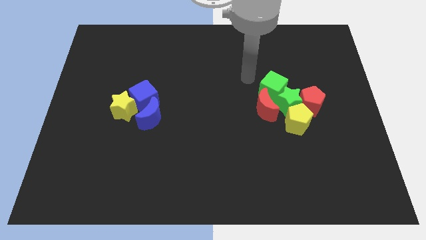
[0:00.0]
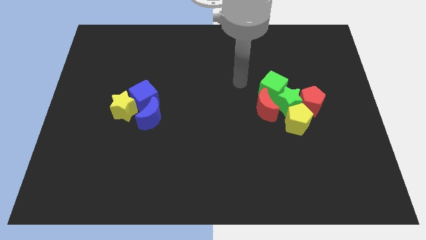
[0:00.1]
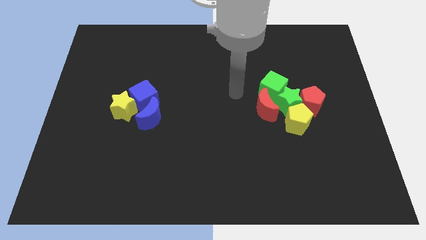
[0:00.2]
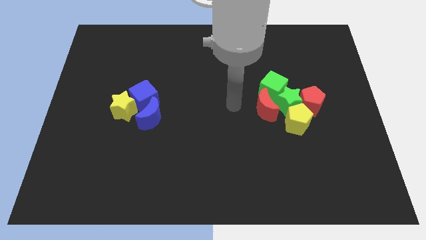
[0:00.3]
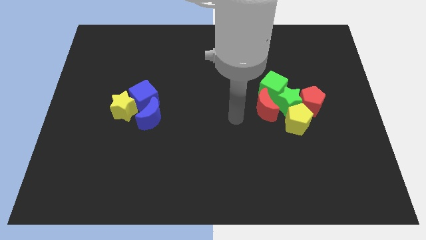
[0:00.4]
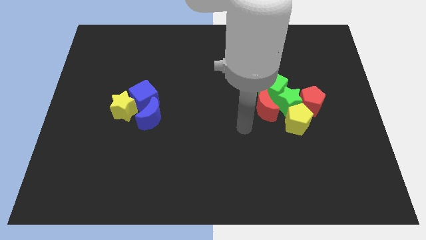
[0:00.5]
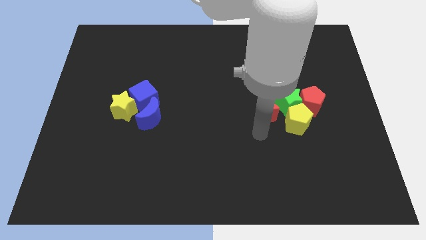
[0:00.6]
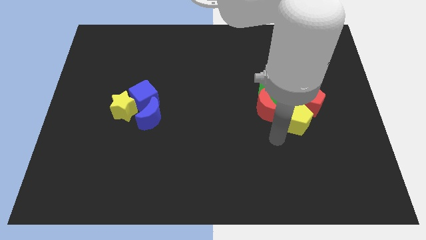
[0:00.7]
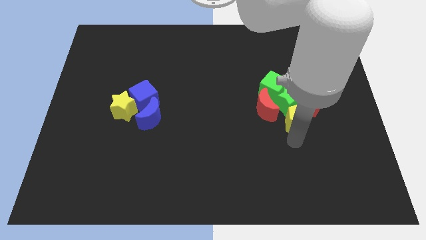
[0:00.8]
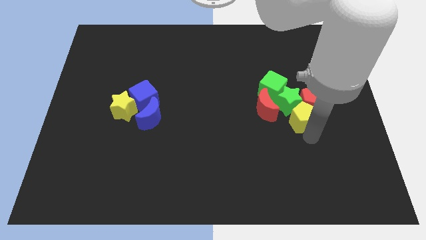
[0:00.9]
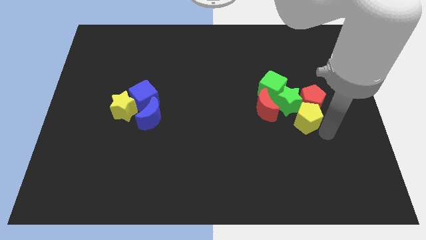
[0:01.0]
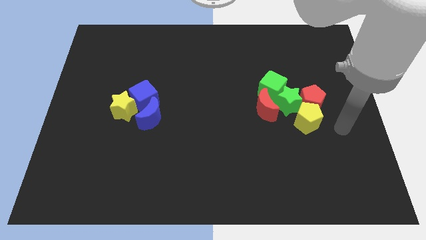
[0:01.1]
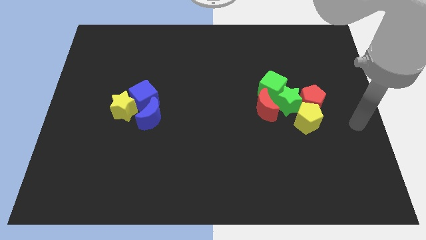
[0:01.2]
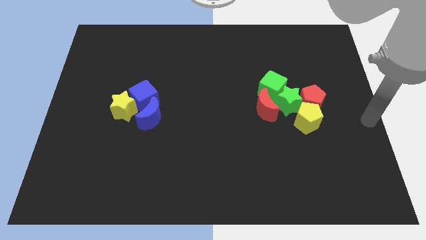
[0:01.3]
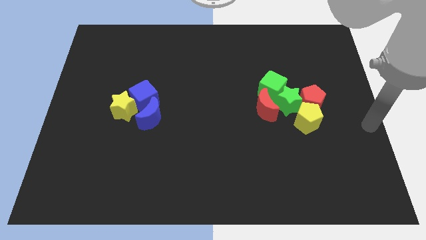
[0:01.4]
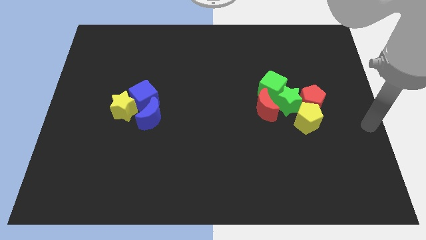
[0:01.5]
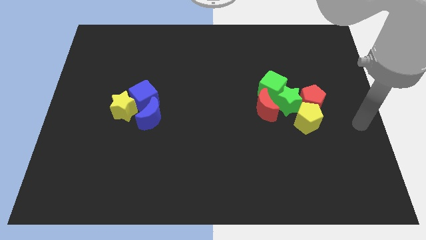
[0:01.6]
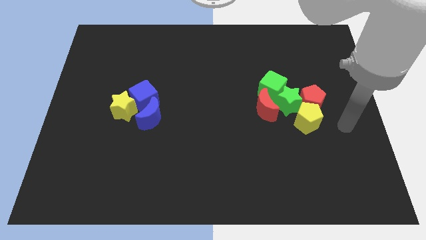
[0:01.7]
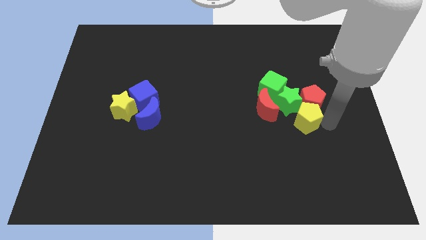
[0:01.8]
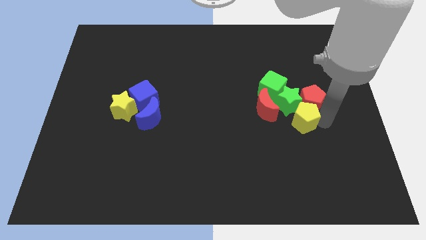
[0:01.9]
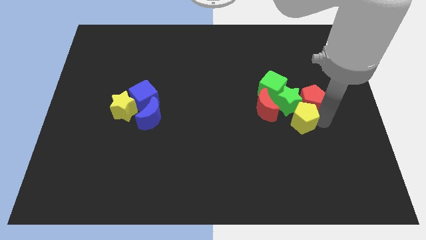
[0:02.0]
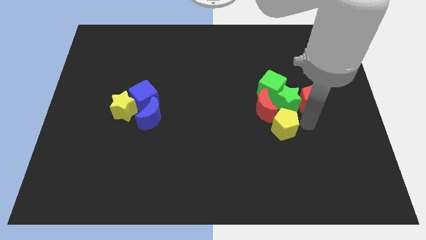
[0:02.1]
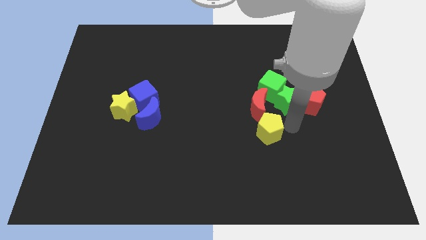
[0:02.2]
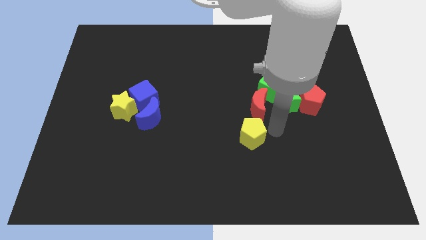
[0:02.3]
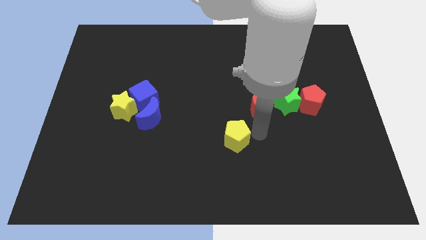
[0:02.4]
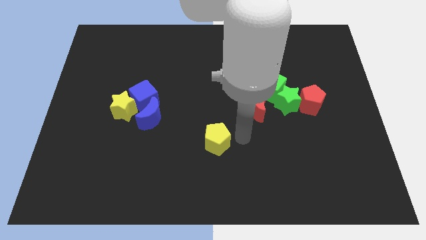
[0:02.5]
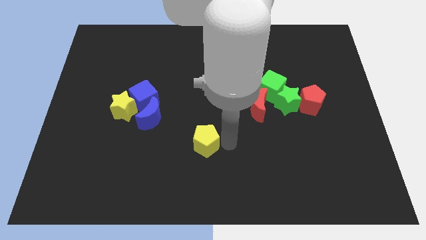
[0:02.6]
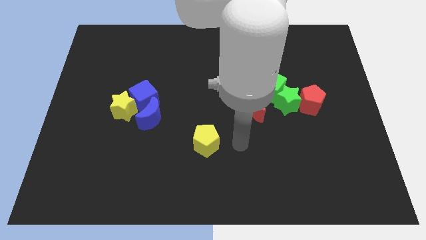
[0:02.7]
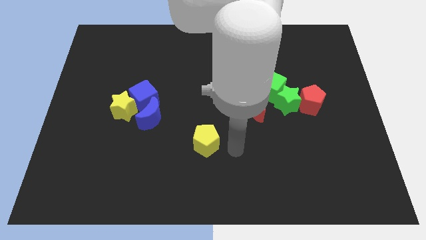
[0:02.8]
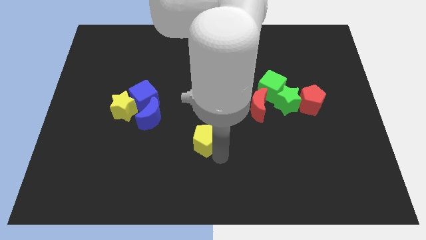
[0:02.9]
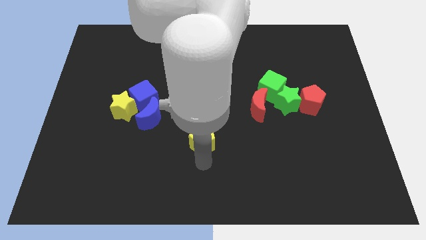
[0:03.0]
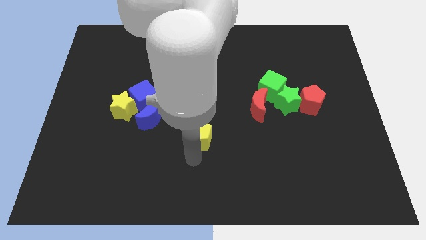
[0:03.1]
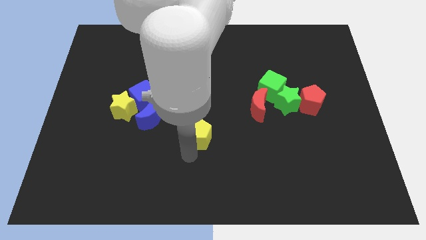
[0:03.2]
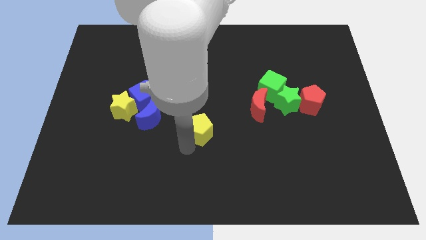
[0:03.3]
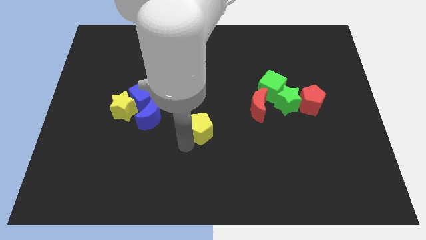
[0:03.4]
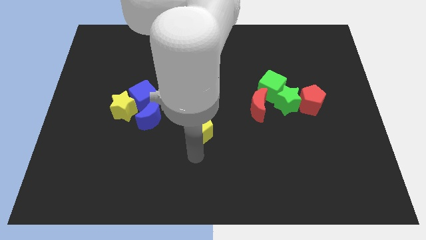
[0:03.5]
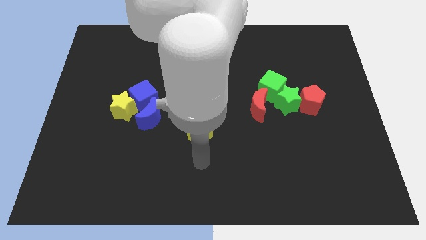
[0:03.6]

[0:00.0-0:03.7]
push the yellow pentagon to the center of the board

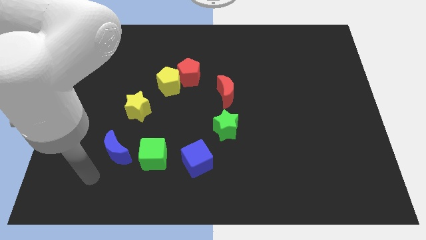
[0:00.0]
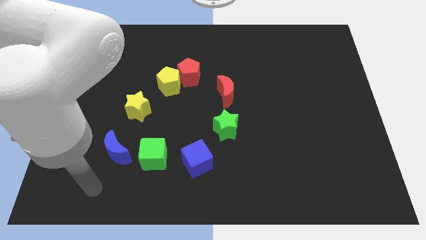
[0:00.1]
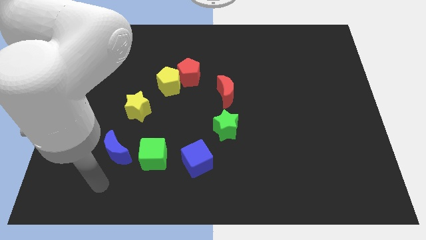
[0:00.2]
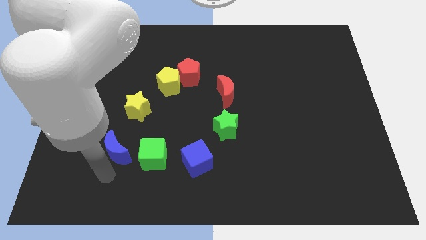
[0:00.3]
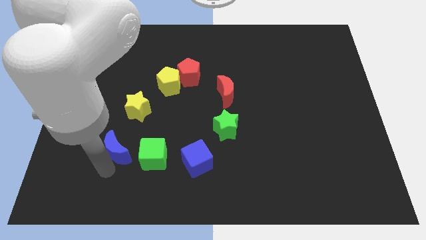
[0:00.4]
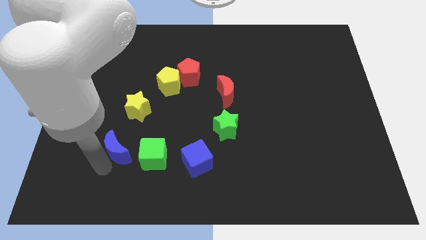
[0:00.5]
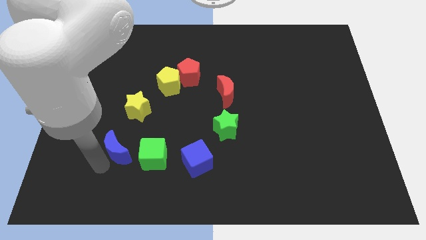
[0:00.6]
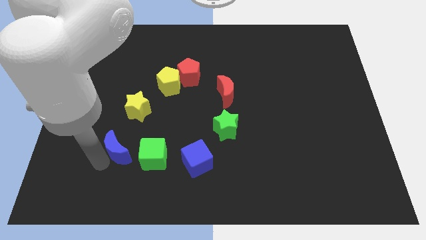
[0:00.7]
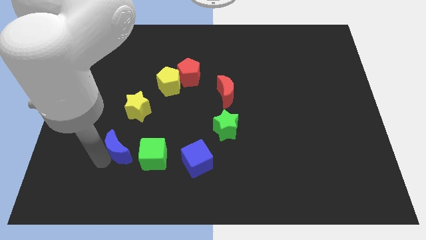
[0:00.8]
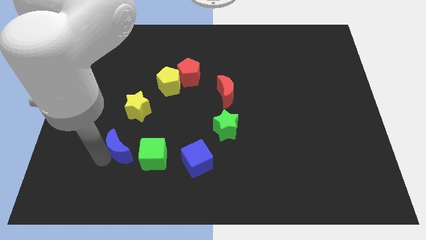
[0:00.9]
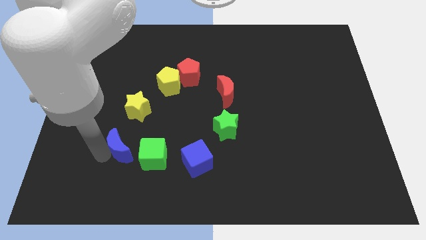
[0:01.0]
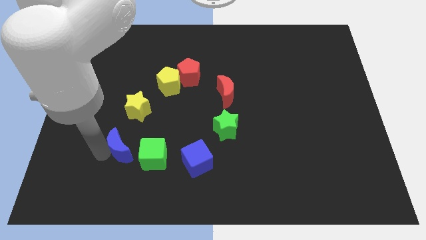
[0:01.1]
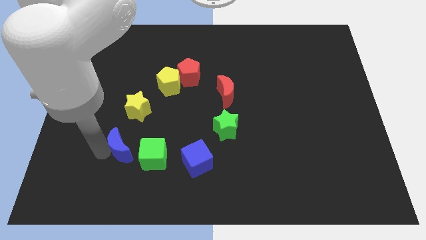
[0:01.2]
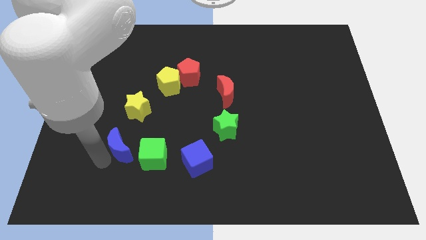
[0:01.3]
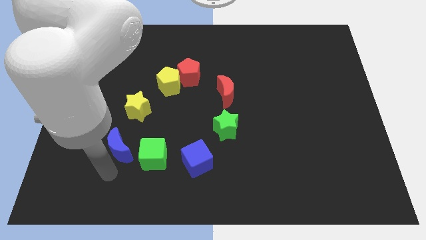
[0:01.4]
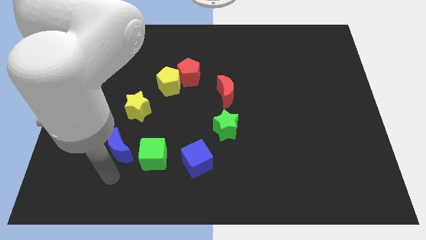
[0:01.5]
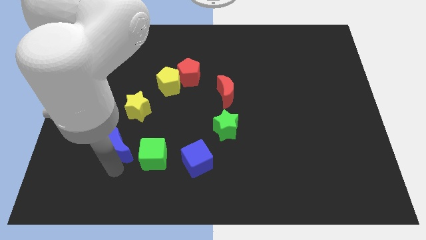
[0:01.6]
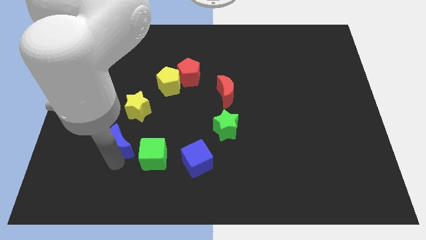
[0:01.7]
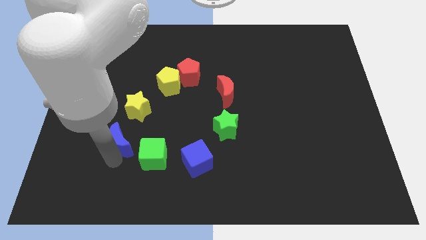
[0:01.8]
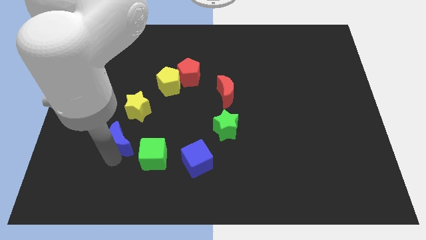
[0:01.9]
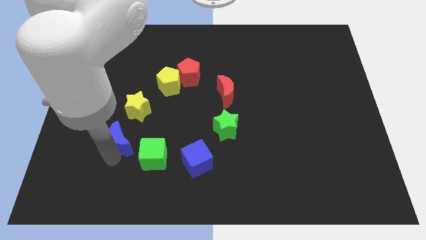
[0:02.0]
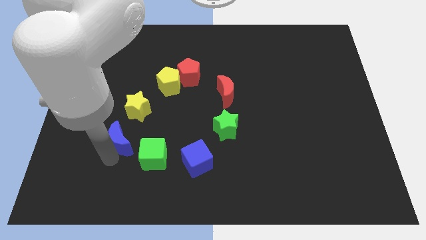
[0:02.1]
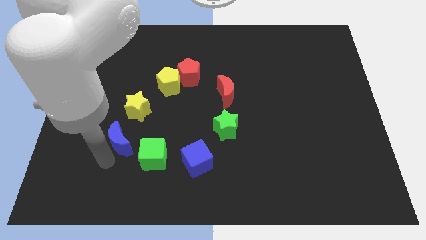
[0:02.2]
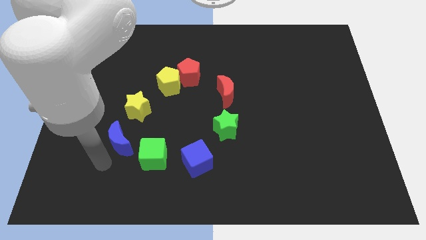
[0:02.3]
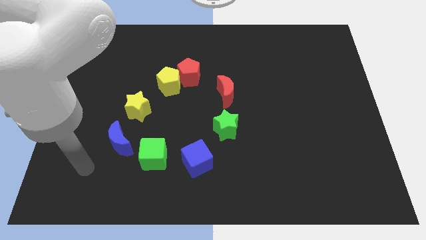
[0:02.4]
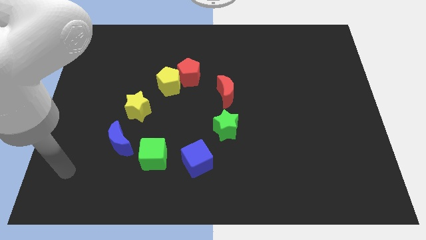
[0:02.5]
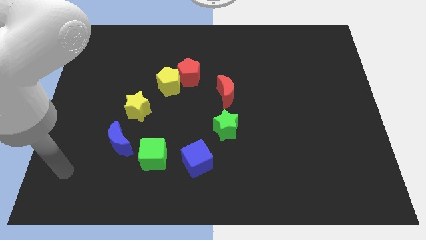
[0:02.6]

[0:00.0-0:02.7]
place your arm slightly towards the bottom left of the board

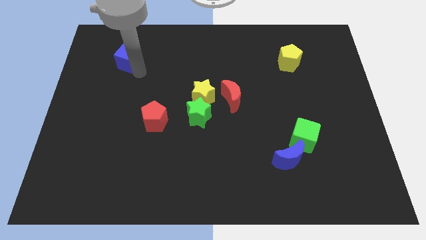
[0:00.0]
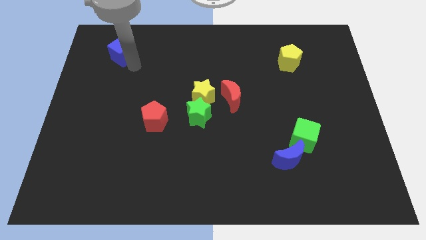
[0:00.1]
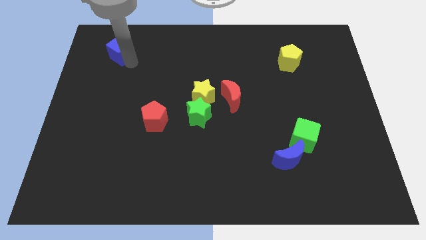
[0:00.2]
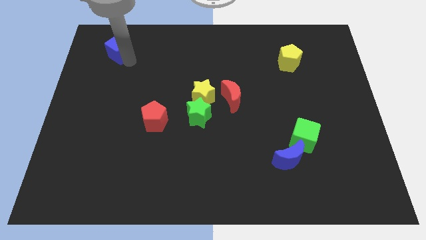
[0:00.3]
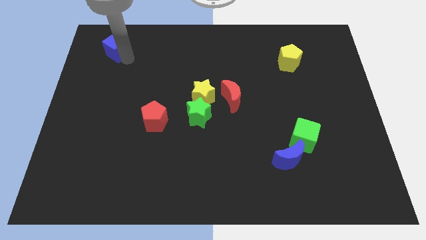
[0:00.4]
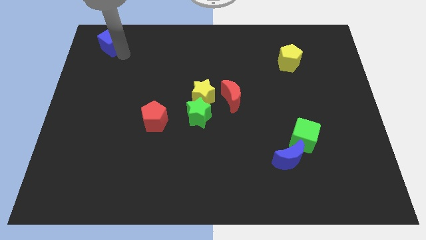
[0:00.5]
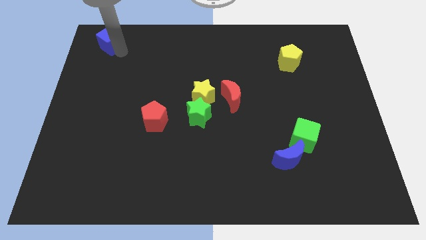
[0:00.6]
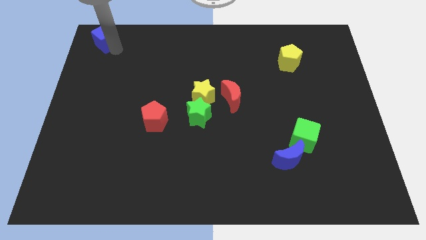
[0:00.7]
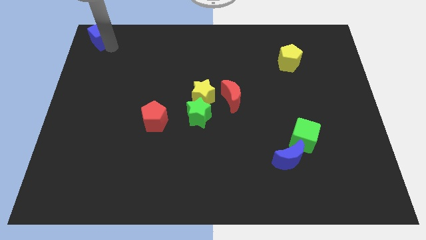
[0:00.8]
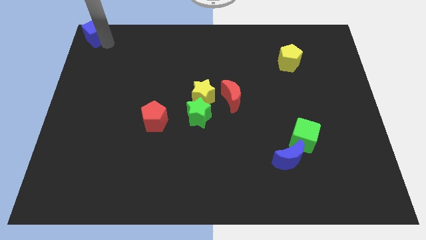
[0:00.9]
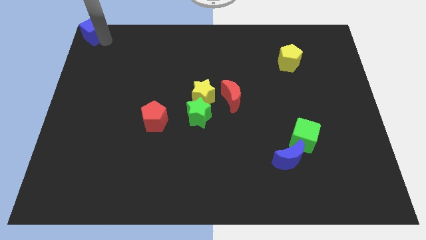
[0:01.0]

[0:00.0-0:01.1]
slide the blue cube to the top left corner of the board

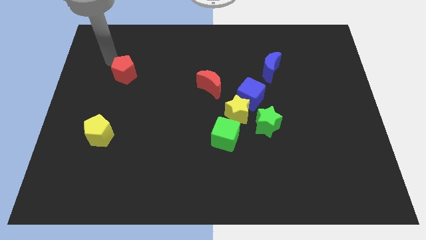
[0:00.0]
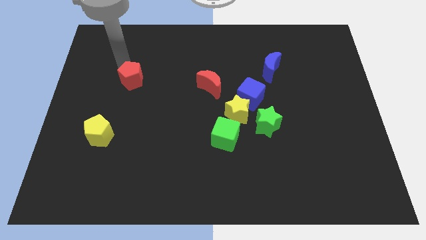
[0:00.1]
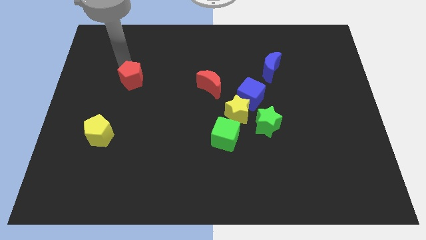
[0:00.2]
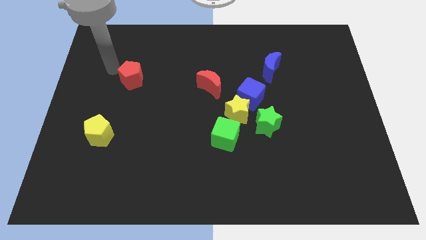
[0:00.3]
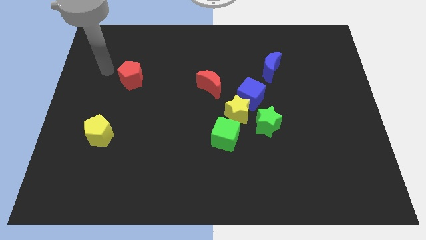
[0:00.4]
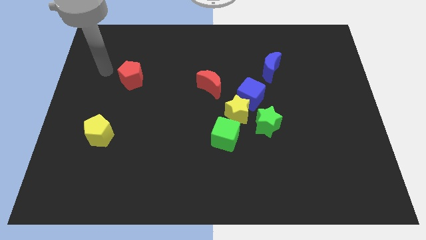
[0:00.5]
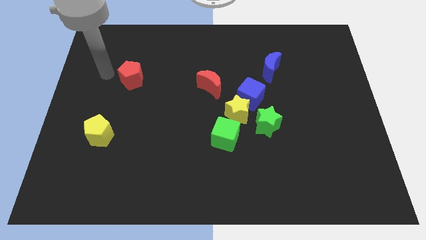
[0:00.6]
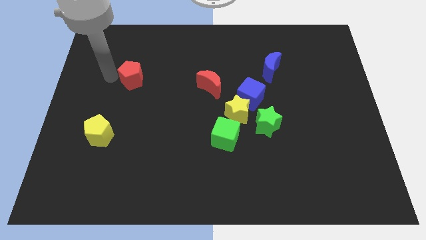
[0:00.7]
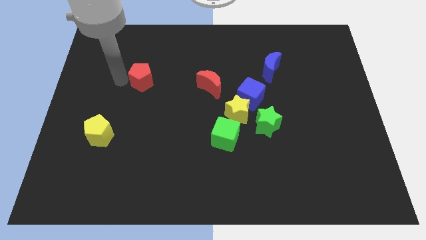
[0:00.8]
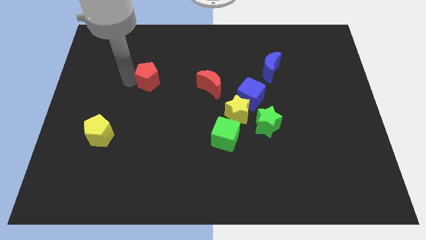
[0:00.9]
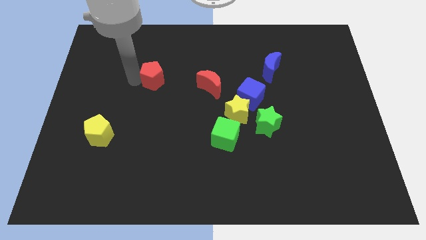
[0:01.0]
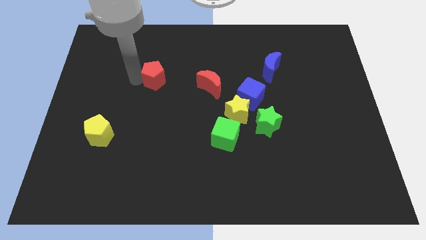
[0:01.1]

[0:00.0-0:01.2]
slide the red pentagon towards the red moon

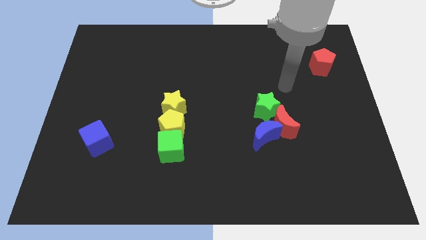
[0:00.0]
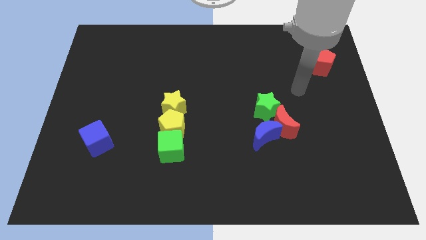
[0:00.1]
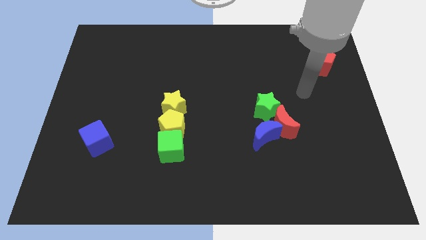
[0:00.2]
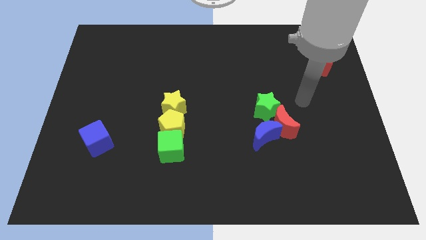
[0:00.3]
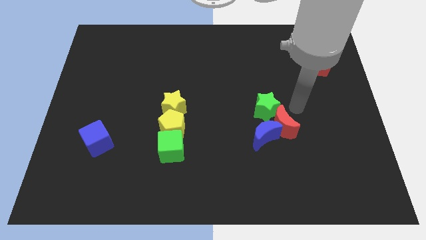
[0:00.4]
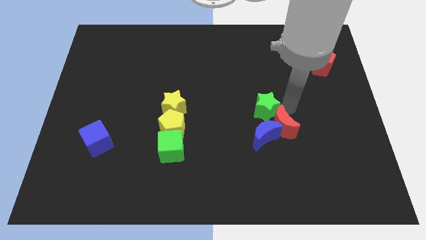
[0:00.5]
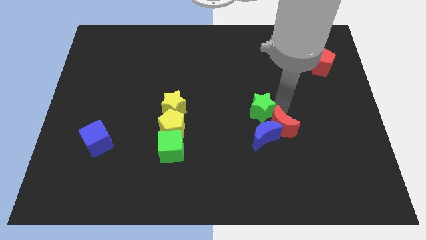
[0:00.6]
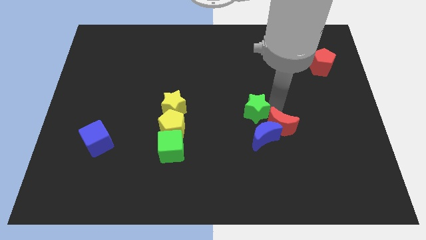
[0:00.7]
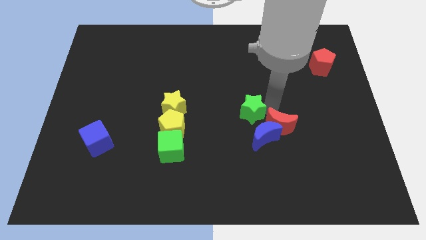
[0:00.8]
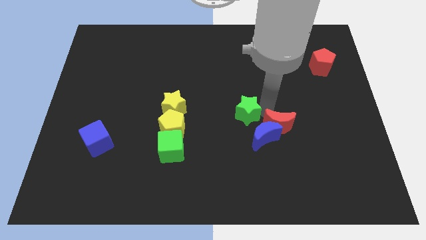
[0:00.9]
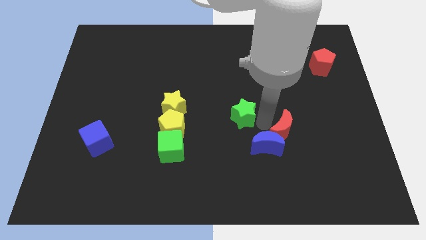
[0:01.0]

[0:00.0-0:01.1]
separate the green star and red crescent from each other
